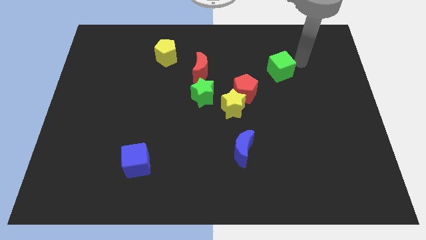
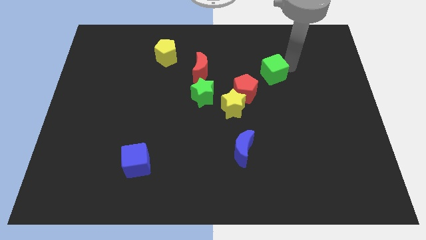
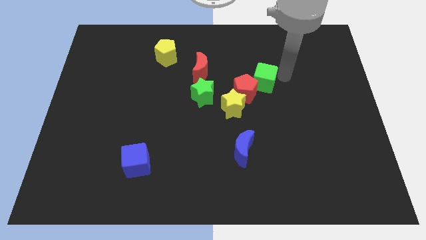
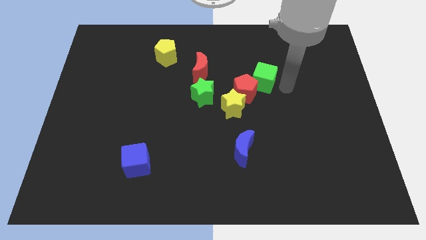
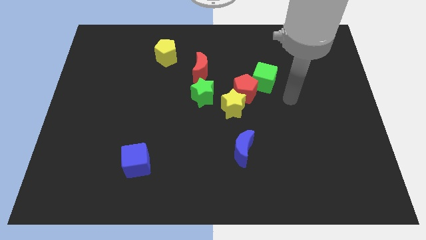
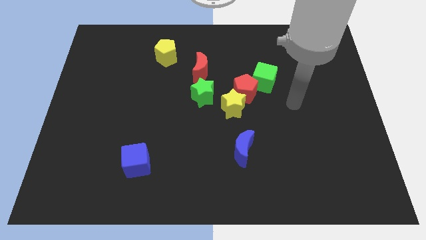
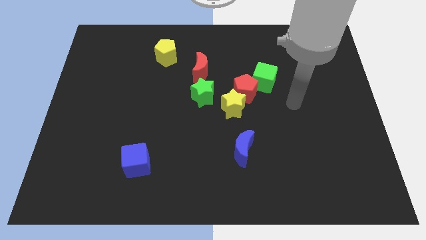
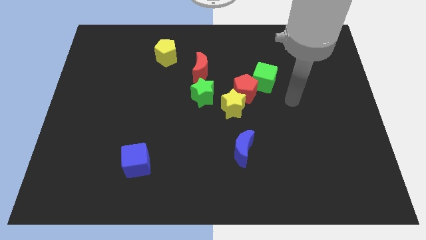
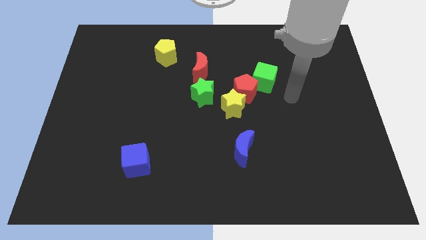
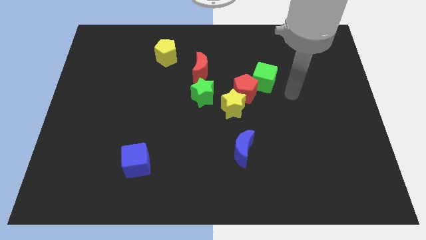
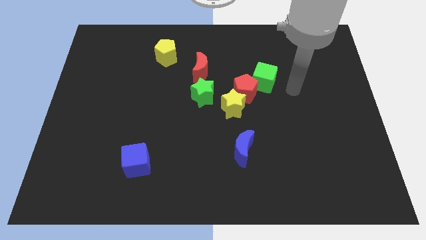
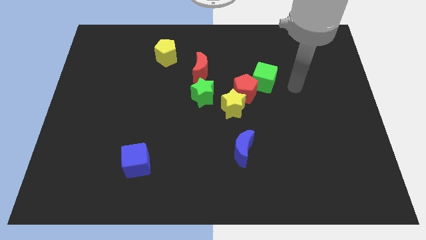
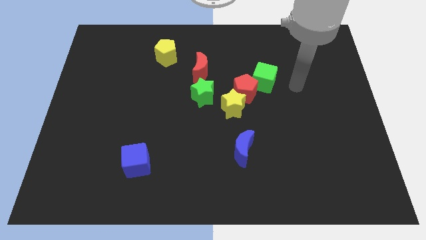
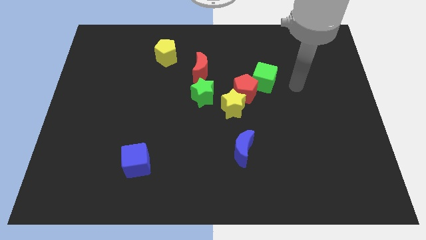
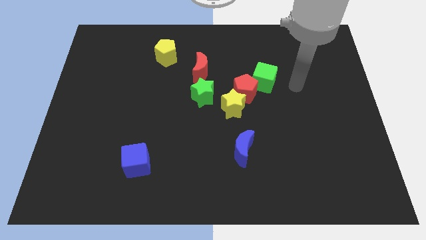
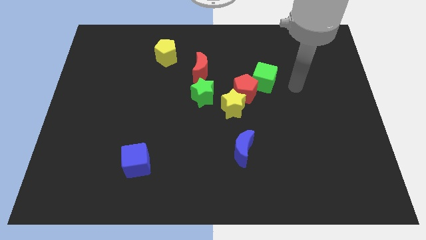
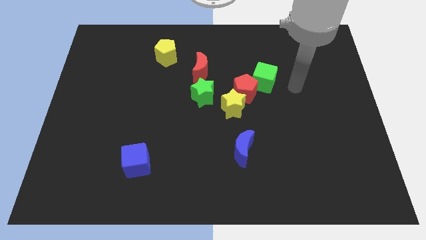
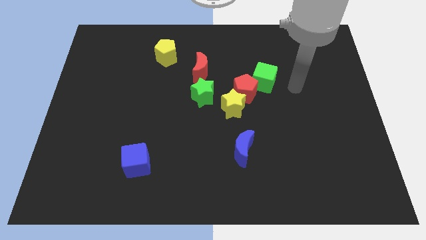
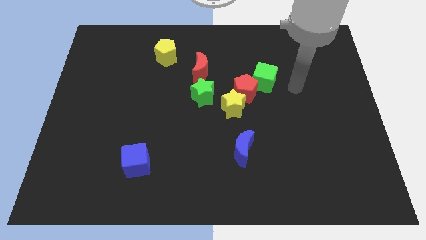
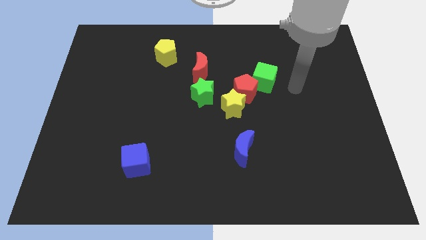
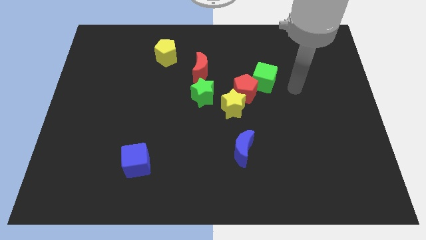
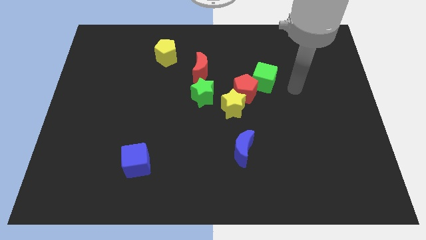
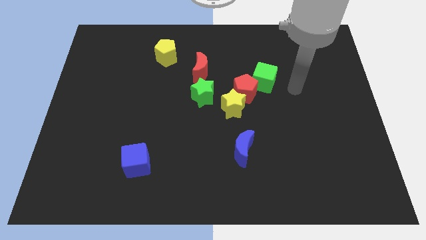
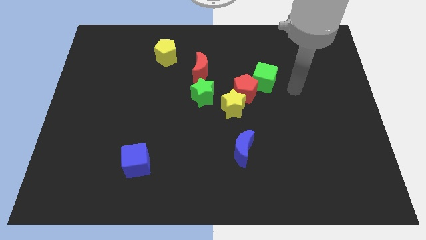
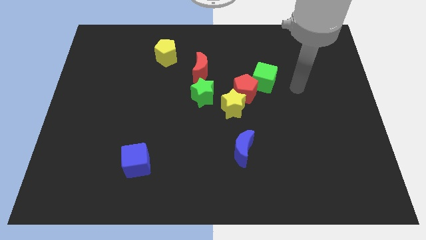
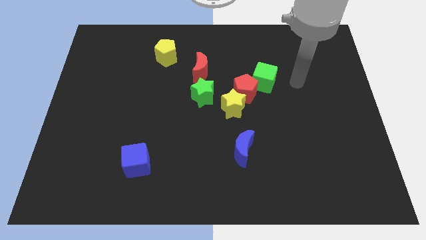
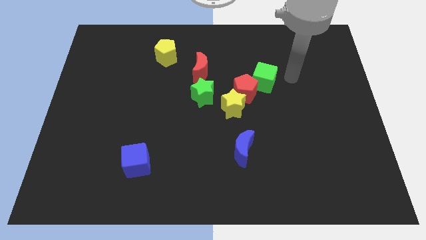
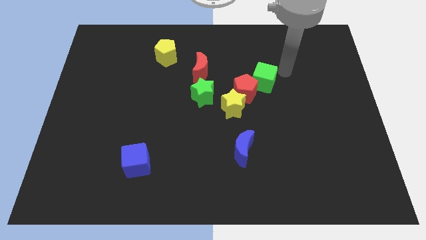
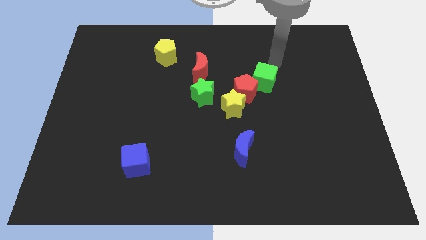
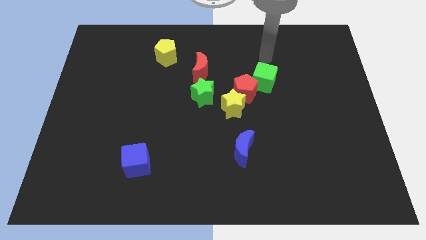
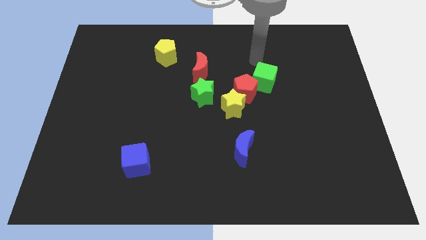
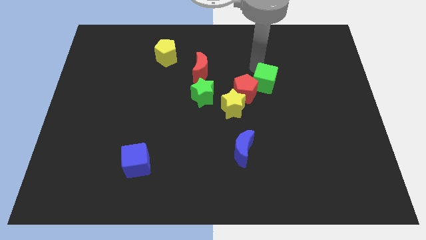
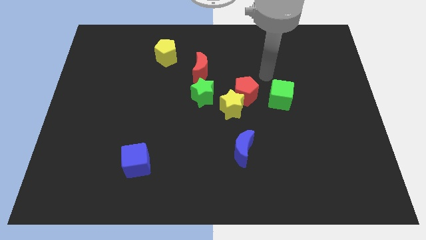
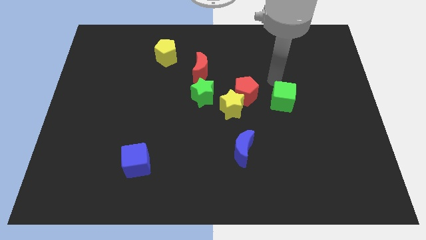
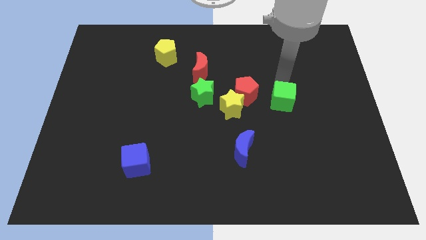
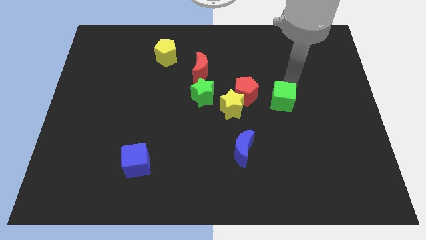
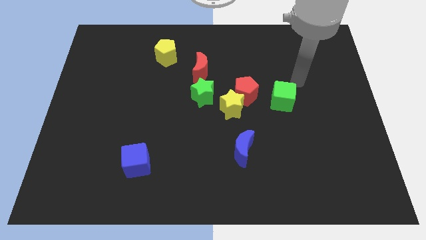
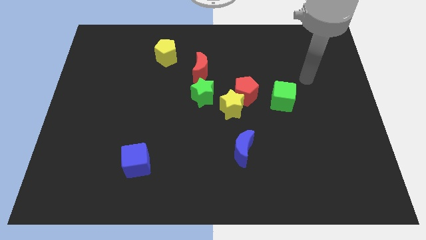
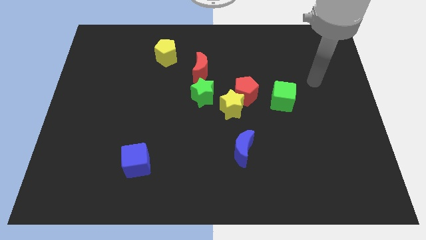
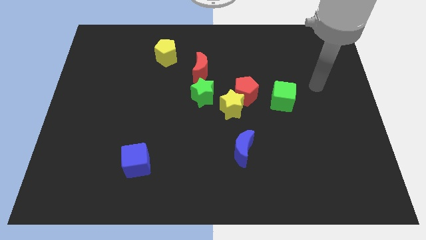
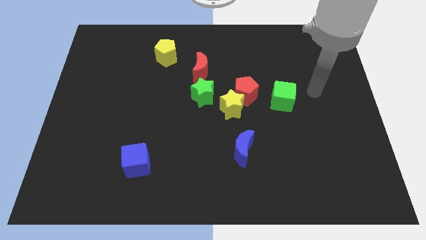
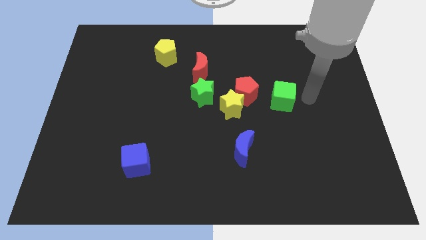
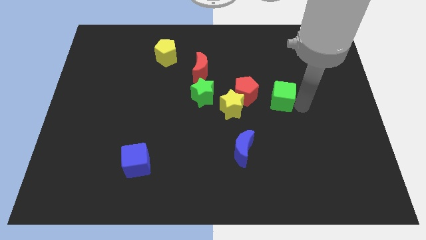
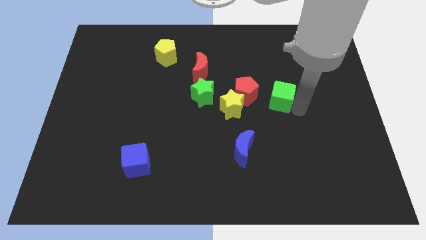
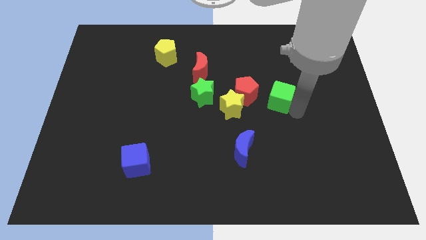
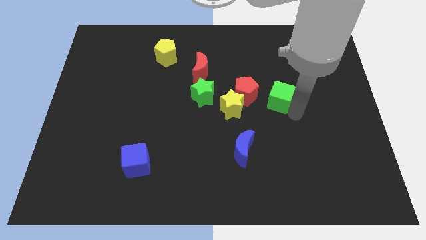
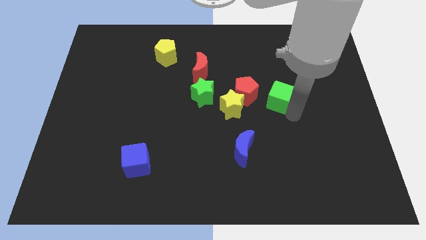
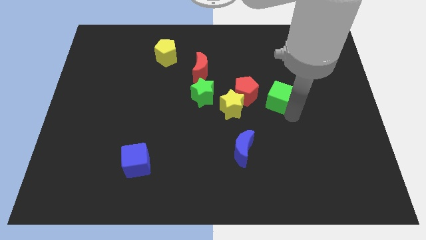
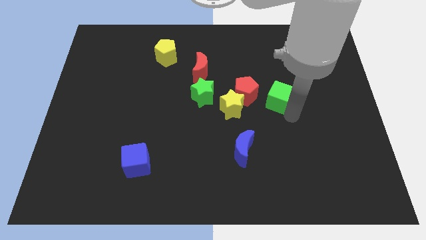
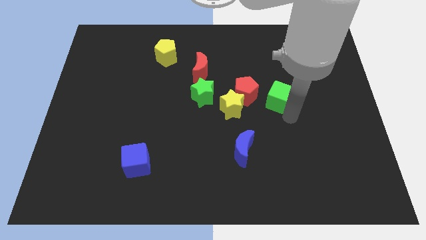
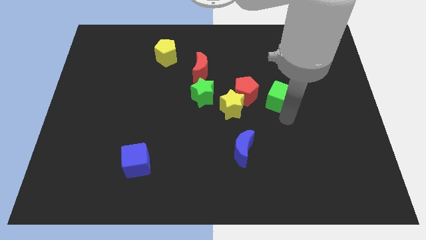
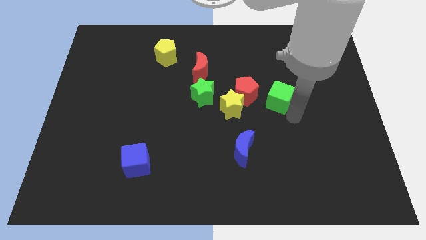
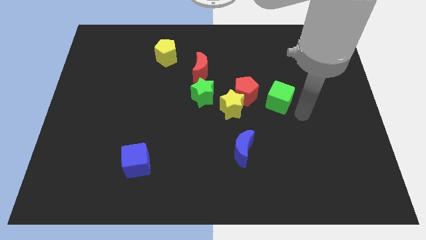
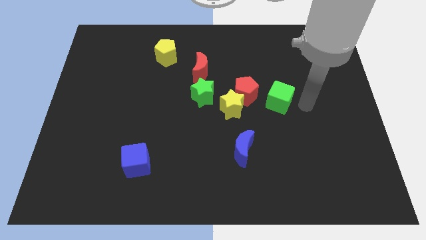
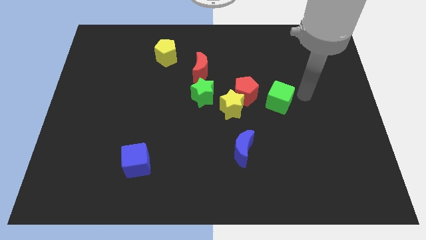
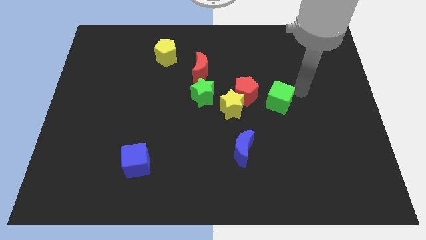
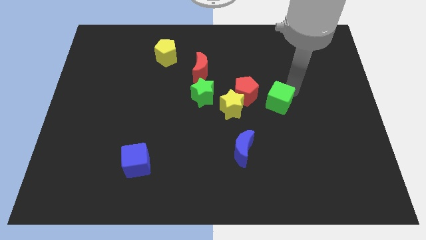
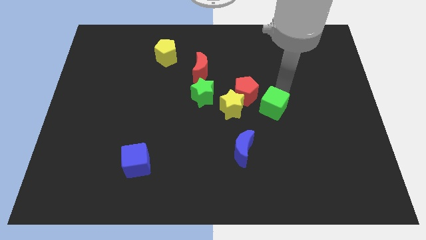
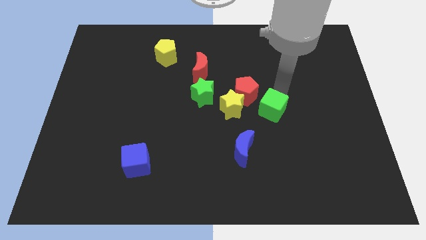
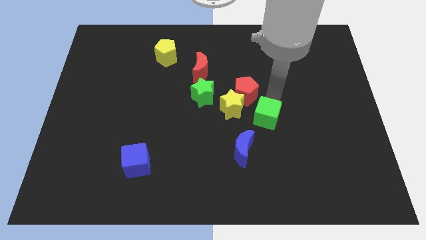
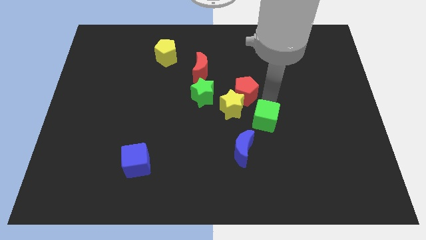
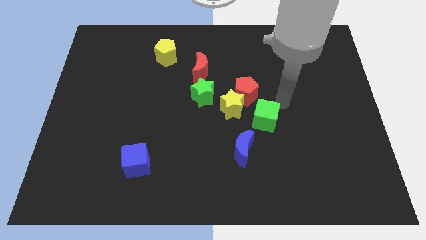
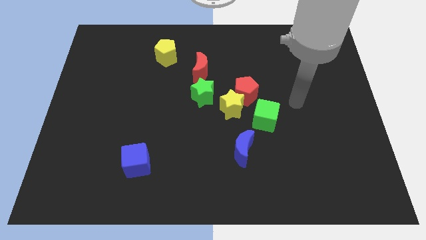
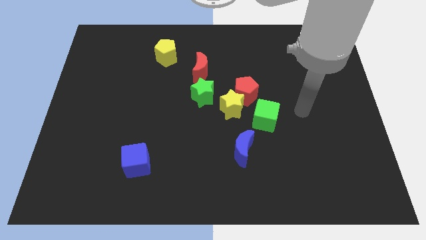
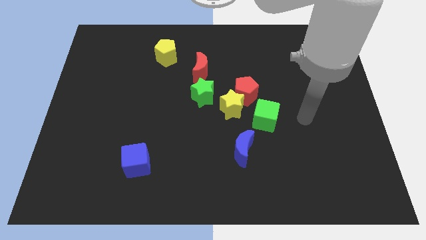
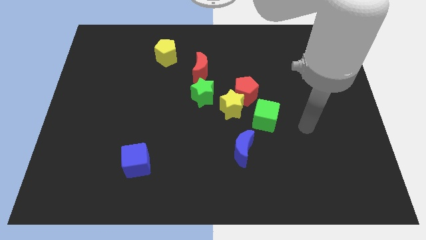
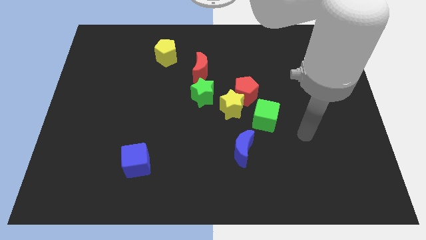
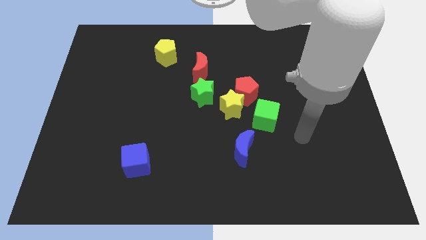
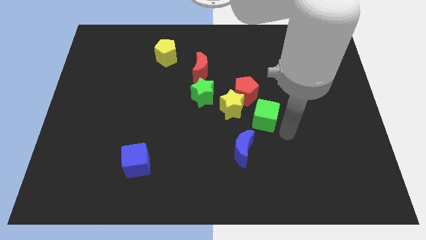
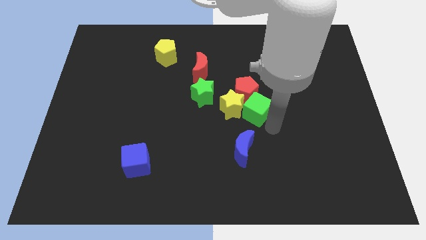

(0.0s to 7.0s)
move the green cube right to the yellow star

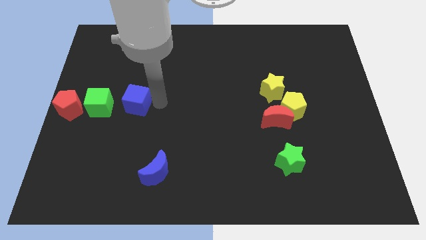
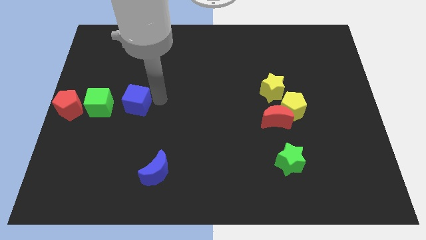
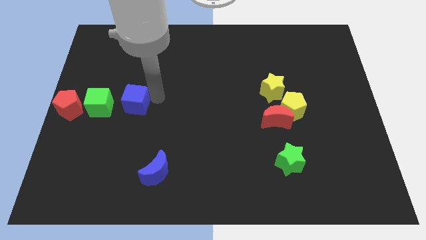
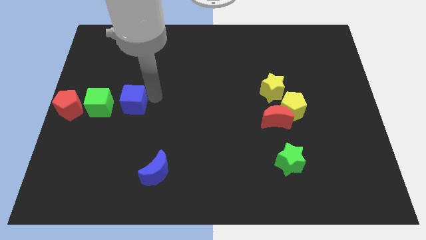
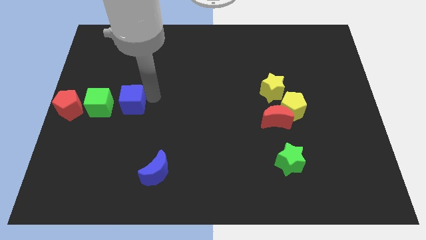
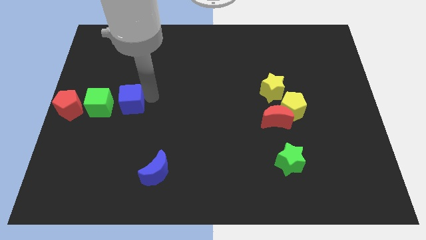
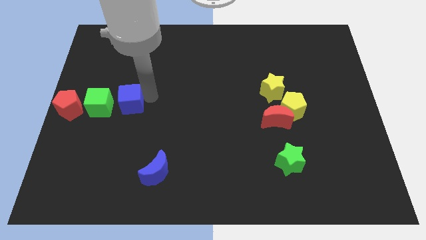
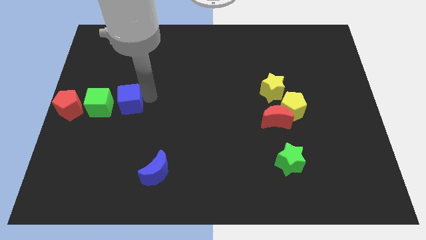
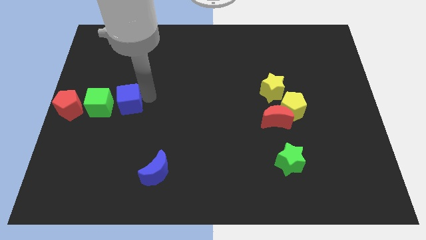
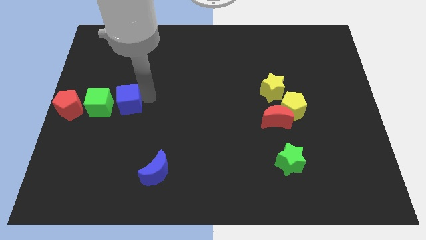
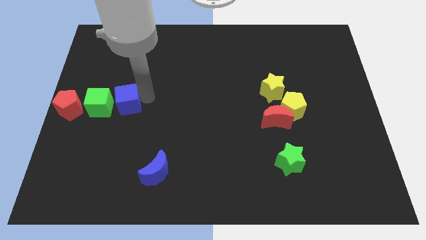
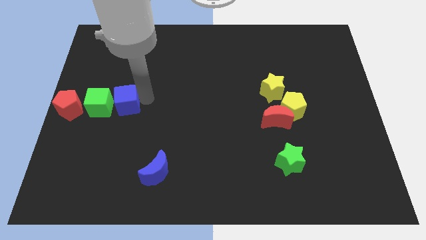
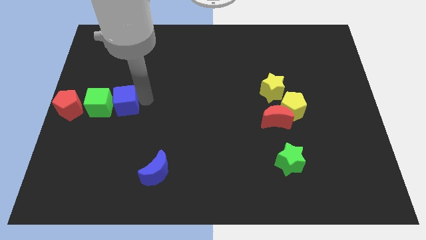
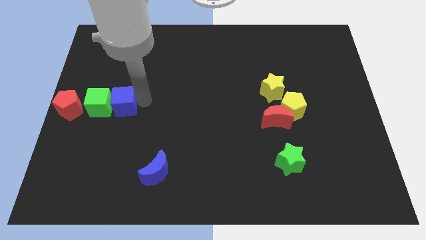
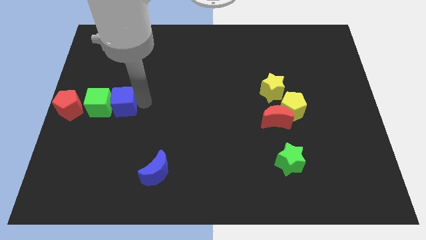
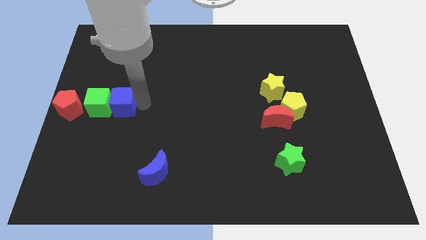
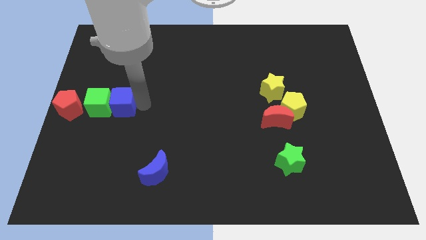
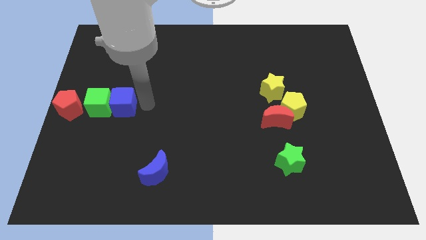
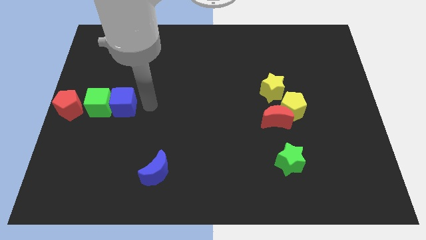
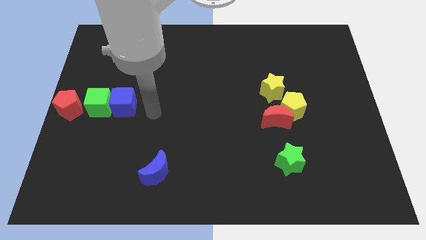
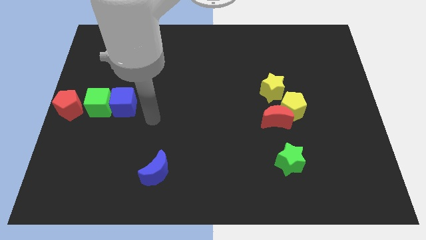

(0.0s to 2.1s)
add blue cube into green cube
